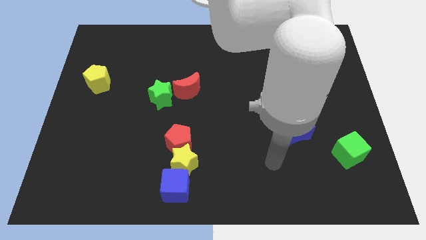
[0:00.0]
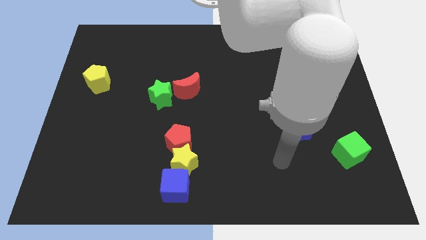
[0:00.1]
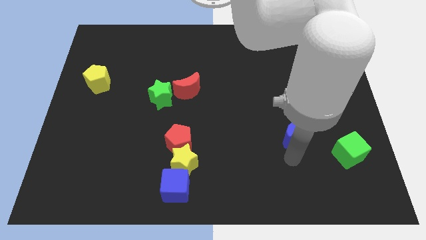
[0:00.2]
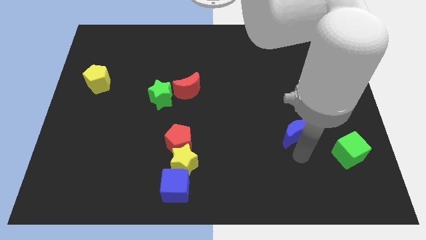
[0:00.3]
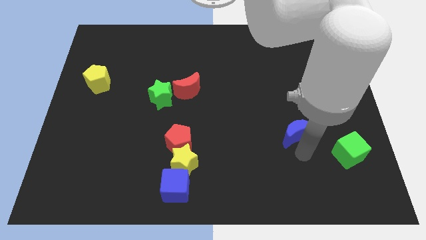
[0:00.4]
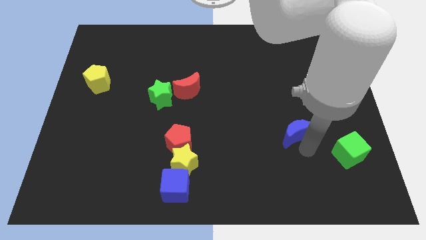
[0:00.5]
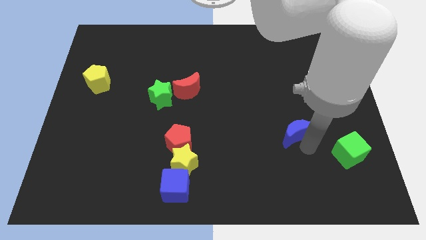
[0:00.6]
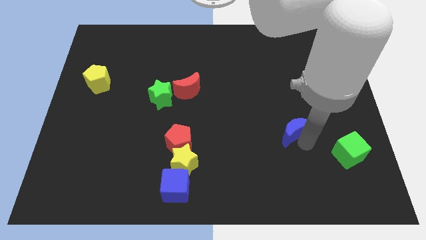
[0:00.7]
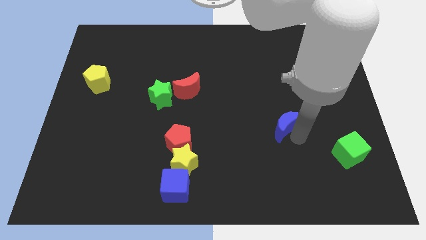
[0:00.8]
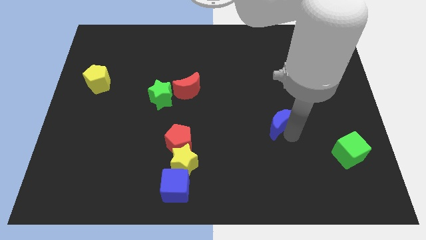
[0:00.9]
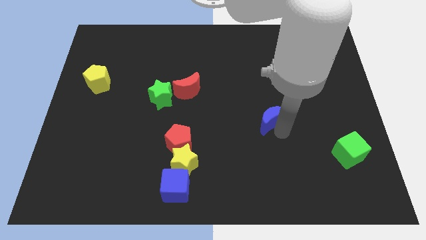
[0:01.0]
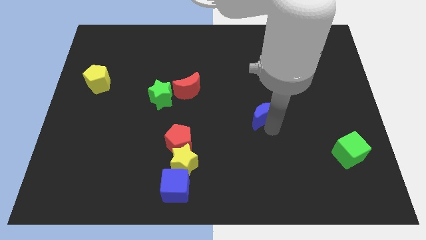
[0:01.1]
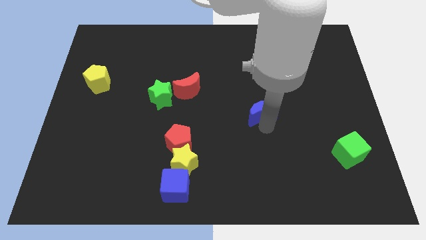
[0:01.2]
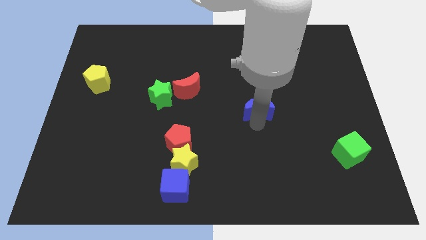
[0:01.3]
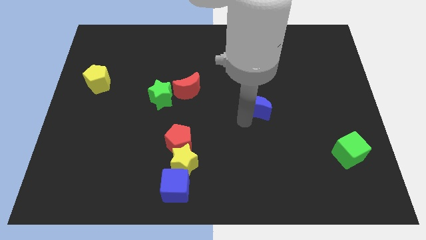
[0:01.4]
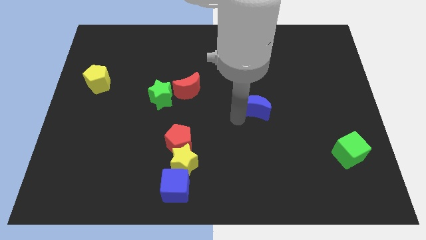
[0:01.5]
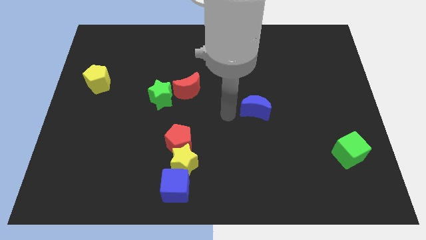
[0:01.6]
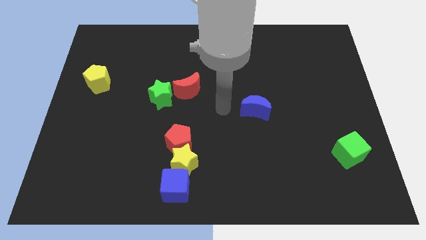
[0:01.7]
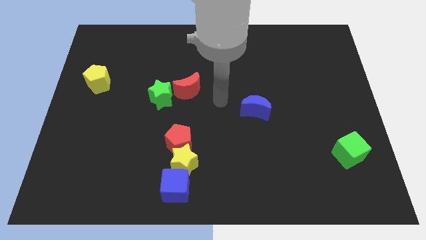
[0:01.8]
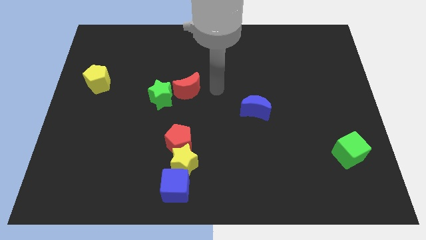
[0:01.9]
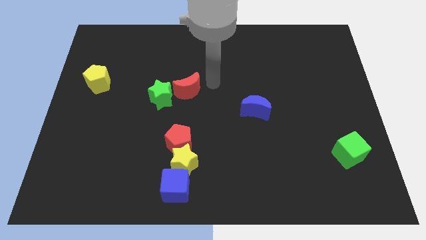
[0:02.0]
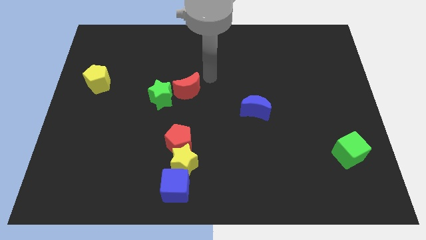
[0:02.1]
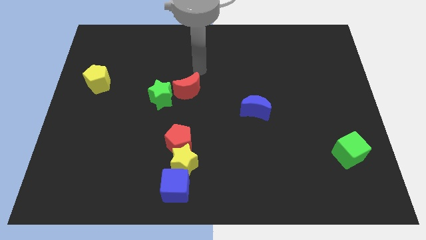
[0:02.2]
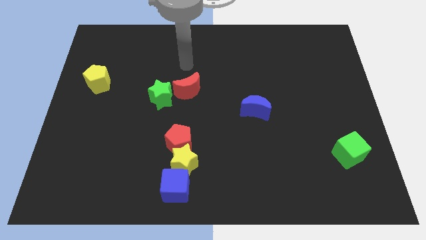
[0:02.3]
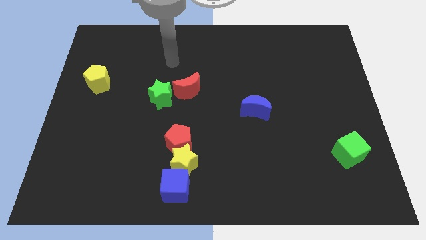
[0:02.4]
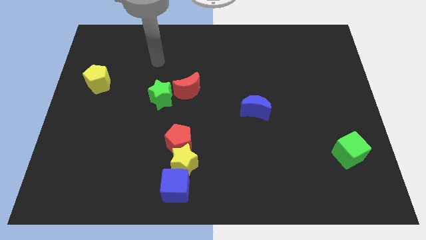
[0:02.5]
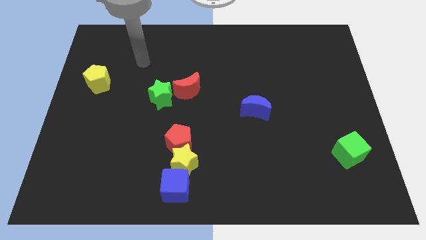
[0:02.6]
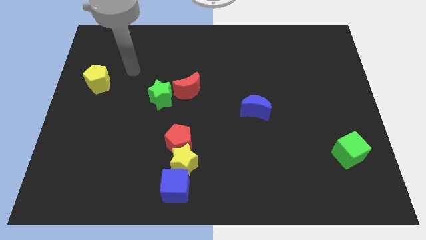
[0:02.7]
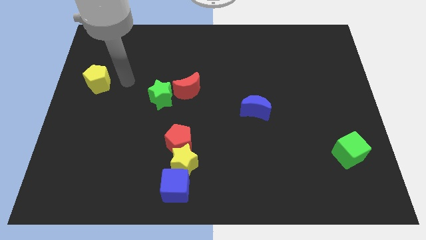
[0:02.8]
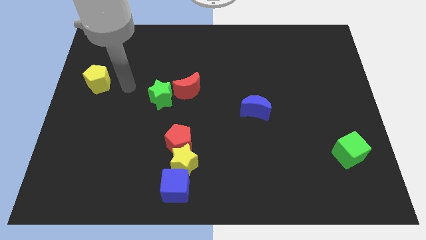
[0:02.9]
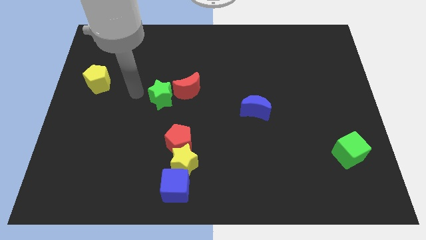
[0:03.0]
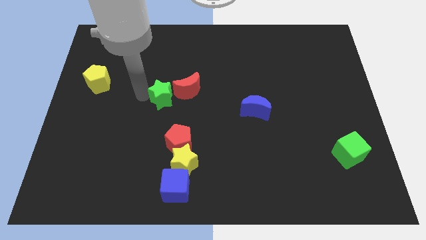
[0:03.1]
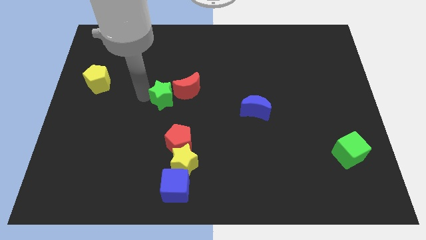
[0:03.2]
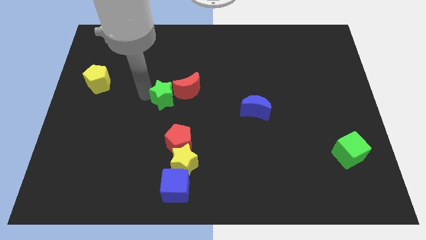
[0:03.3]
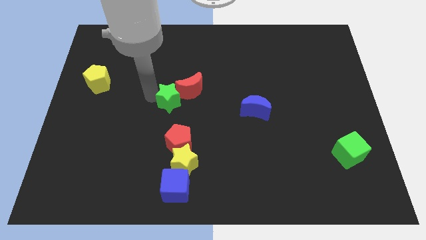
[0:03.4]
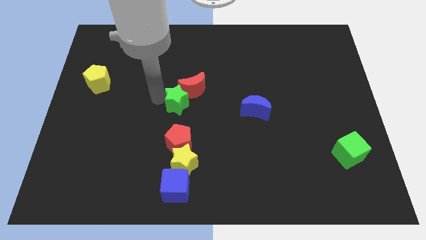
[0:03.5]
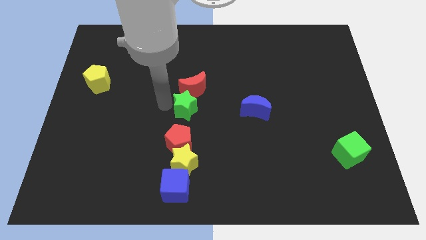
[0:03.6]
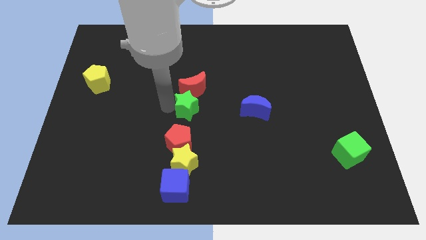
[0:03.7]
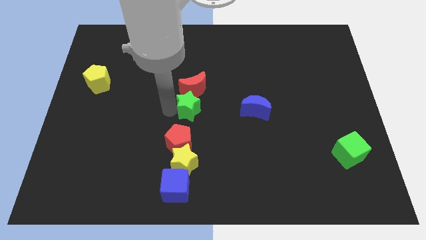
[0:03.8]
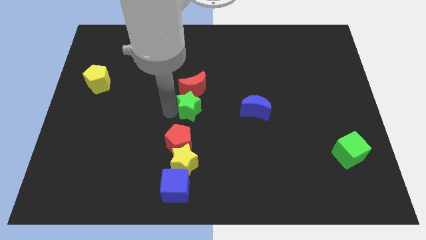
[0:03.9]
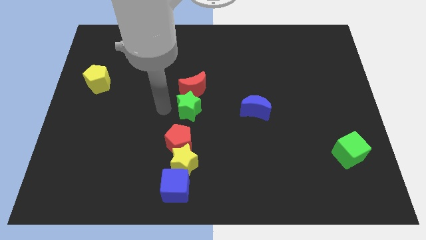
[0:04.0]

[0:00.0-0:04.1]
move green star above to the red pentagon

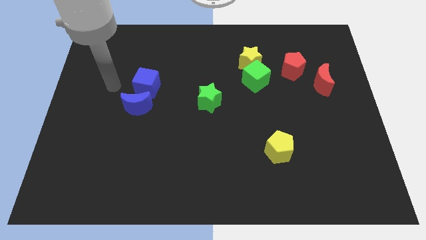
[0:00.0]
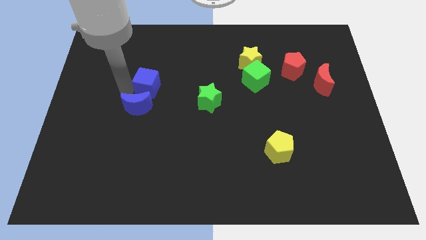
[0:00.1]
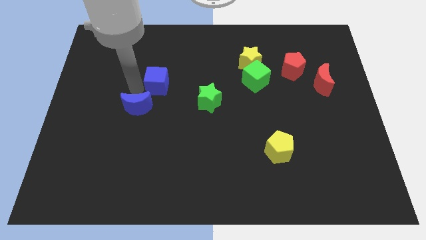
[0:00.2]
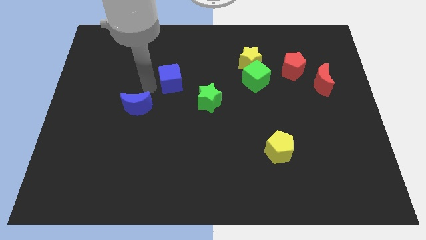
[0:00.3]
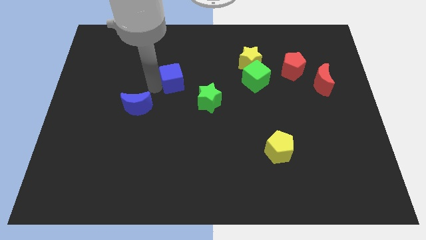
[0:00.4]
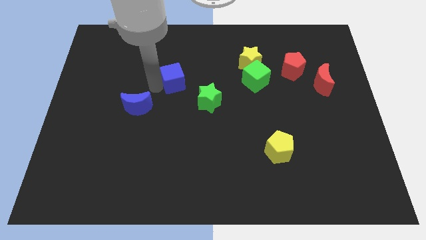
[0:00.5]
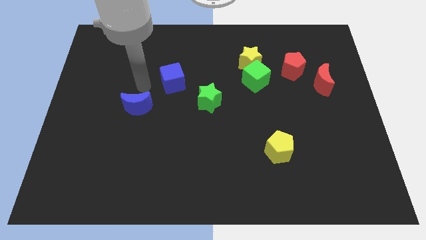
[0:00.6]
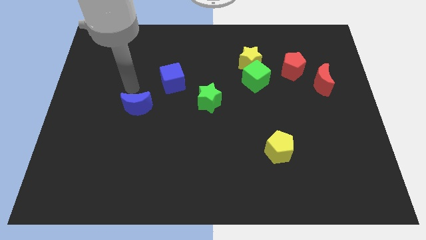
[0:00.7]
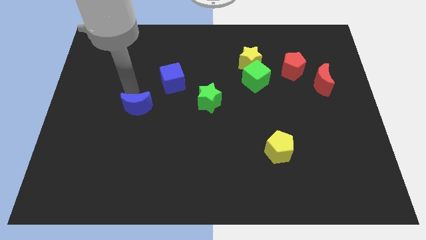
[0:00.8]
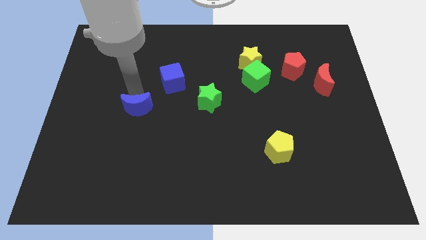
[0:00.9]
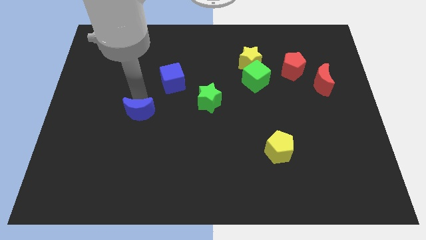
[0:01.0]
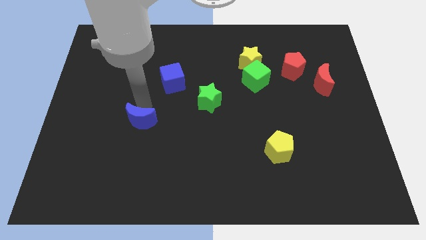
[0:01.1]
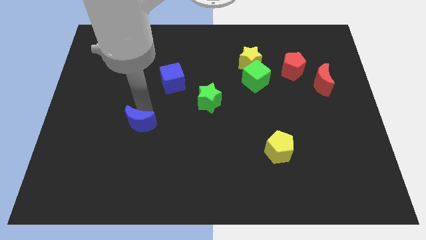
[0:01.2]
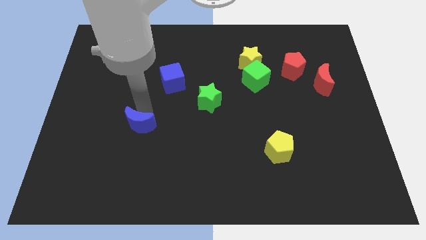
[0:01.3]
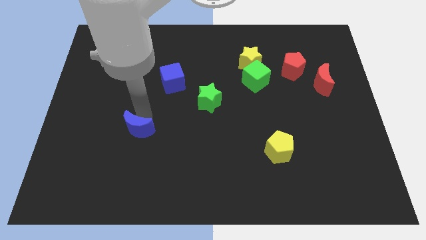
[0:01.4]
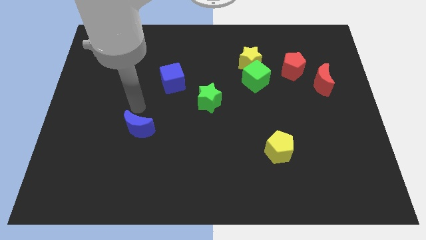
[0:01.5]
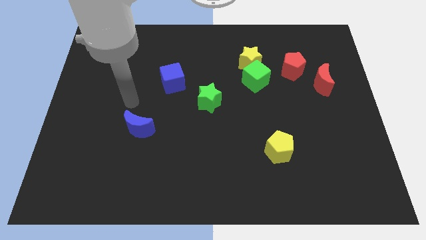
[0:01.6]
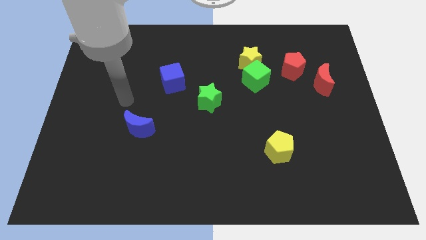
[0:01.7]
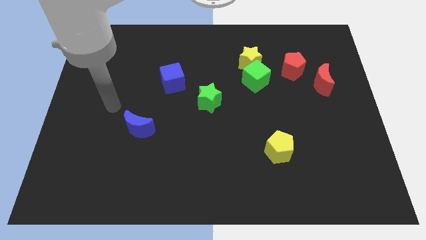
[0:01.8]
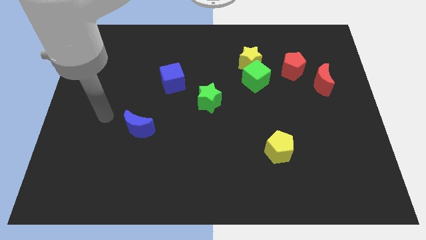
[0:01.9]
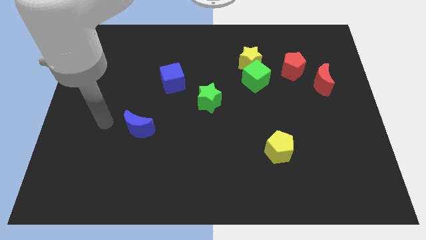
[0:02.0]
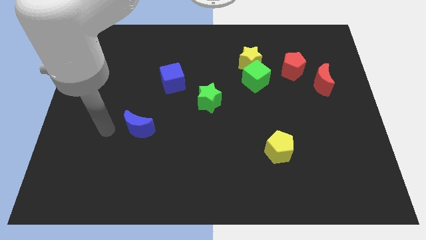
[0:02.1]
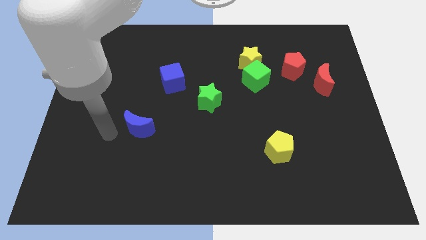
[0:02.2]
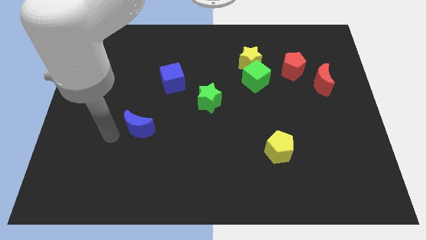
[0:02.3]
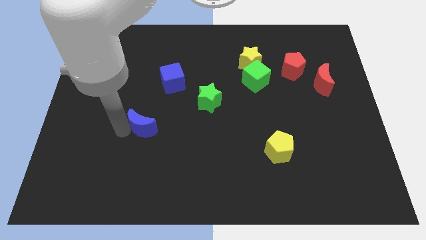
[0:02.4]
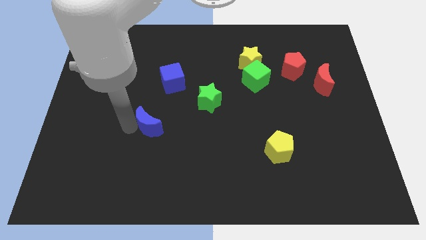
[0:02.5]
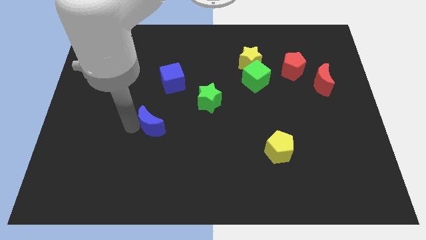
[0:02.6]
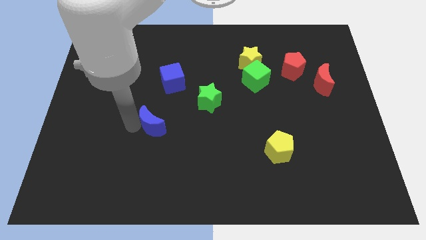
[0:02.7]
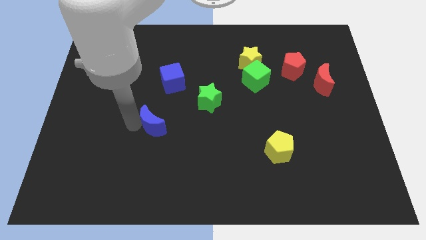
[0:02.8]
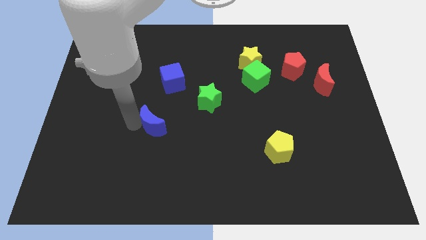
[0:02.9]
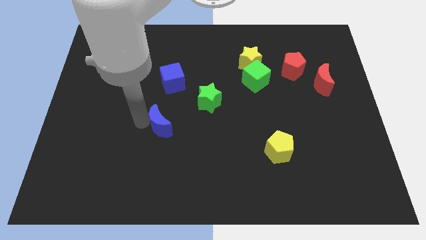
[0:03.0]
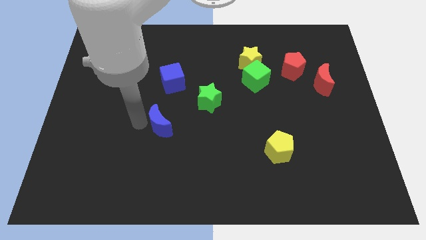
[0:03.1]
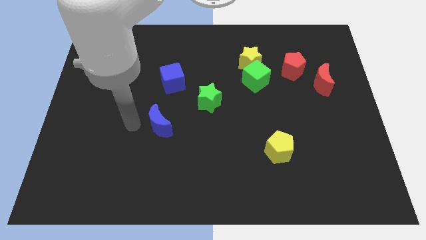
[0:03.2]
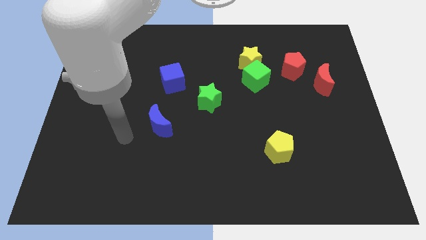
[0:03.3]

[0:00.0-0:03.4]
separate the blue moon and blue cube

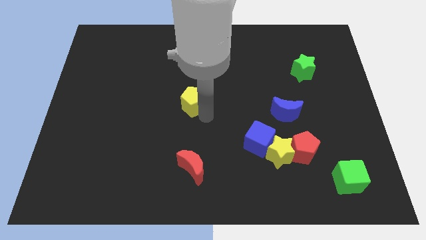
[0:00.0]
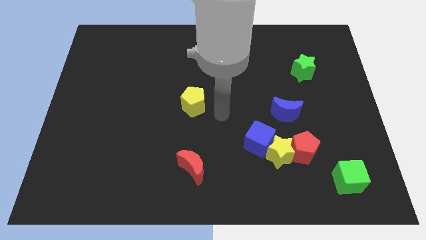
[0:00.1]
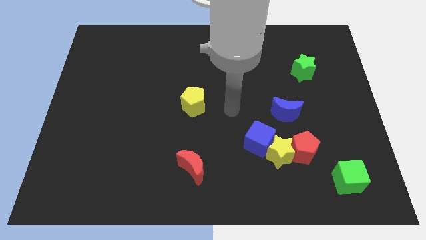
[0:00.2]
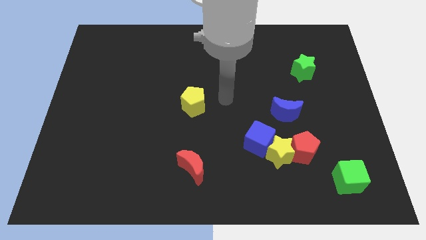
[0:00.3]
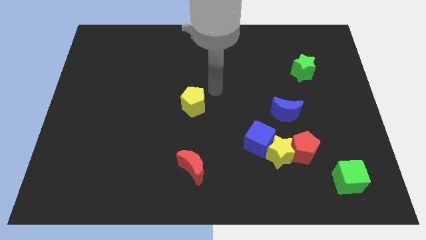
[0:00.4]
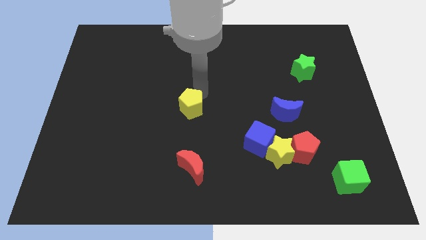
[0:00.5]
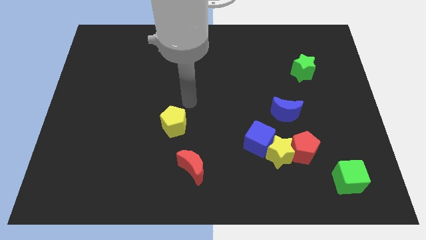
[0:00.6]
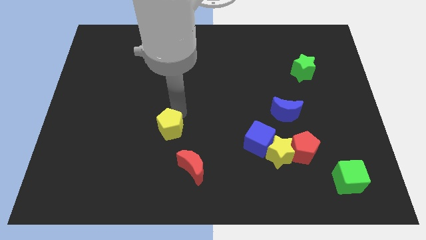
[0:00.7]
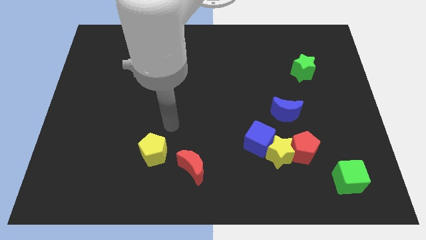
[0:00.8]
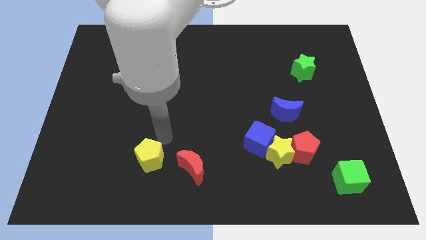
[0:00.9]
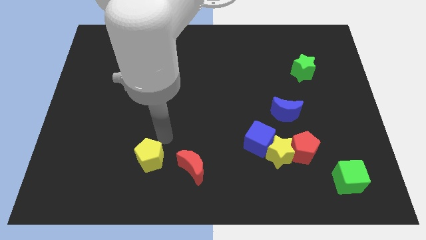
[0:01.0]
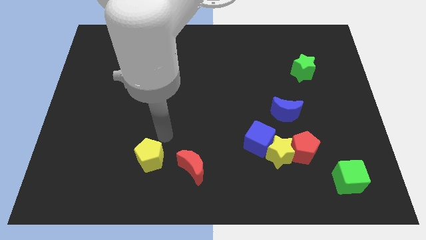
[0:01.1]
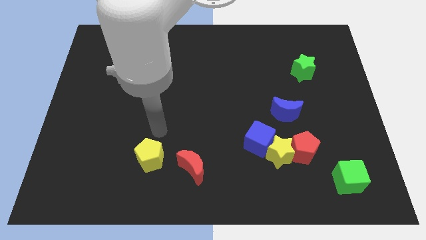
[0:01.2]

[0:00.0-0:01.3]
place the yellow pentagon at left side of the red crescent

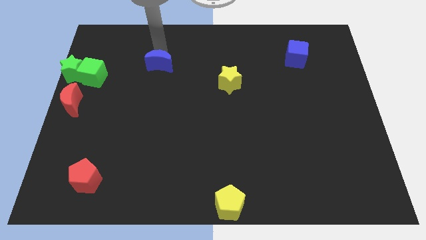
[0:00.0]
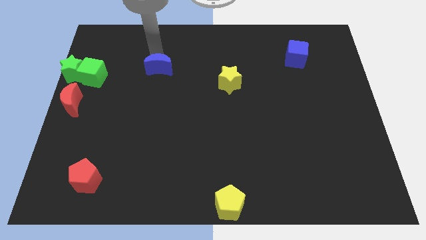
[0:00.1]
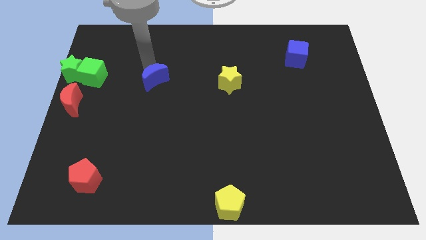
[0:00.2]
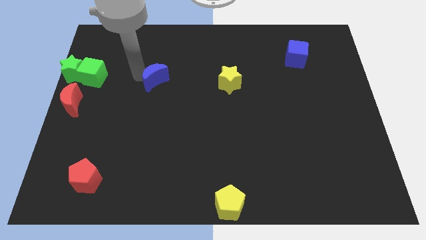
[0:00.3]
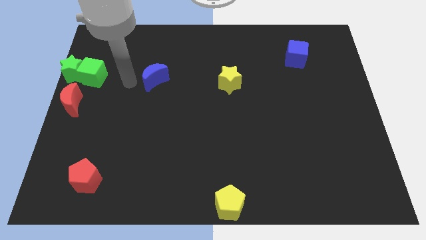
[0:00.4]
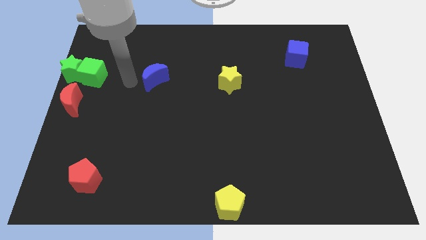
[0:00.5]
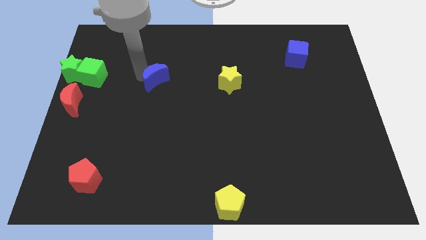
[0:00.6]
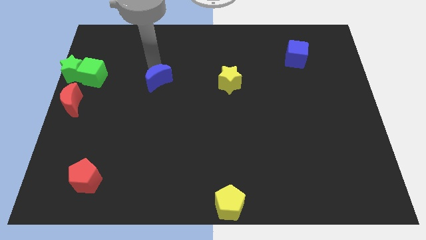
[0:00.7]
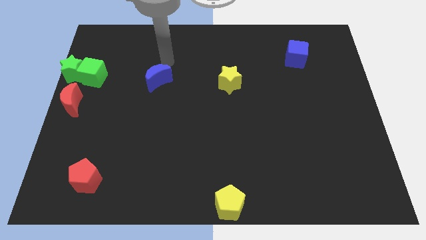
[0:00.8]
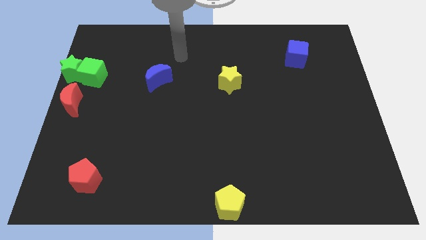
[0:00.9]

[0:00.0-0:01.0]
slide the blue moon
